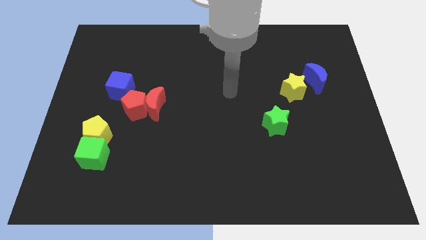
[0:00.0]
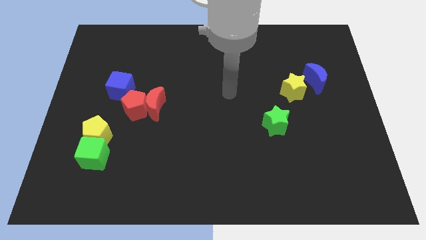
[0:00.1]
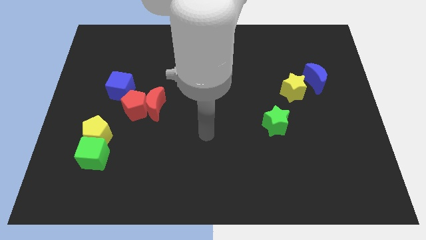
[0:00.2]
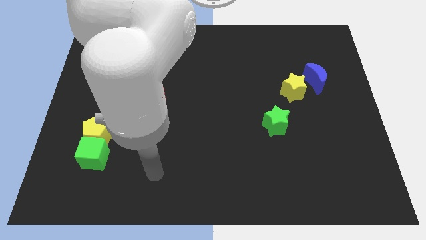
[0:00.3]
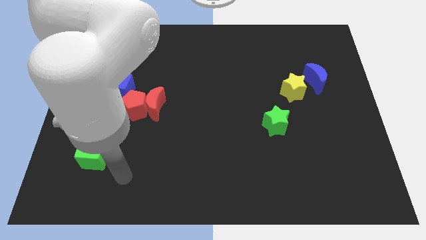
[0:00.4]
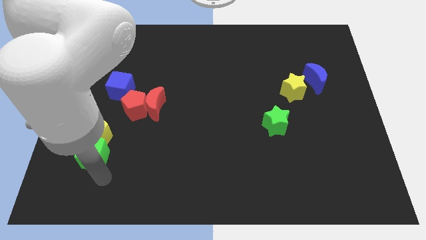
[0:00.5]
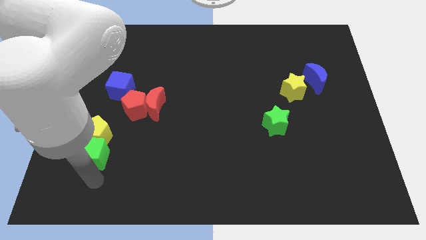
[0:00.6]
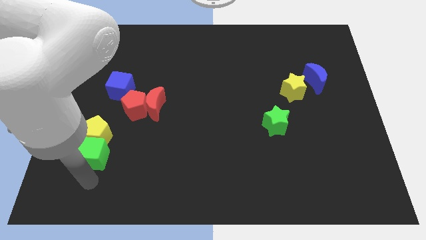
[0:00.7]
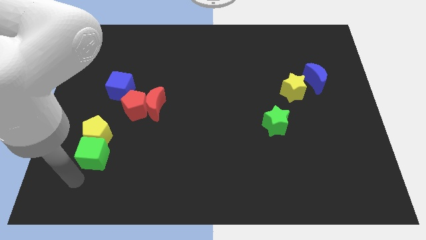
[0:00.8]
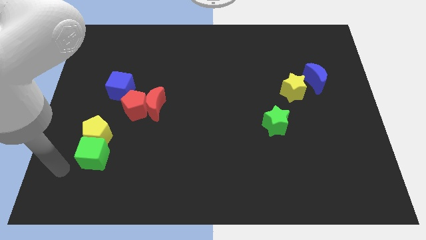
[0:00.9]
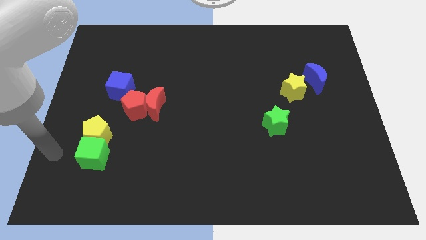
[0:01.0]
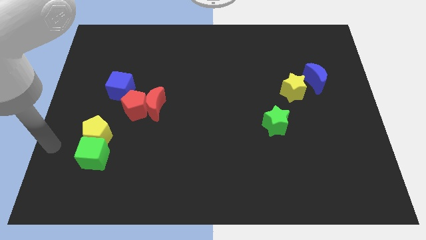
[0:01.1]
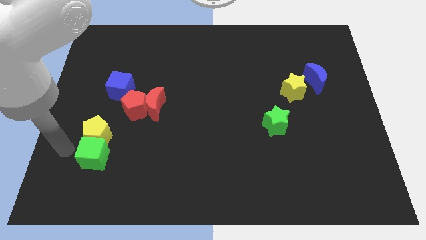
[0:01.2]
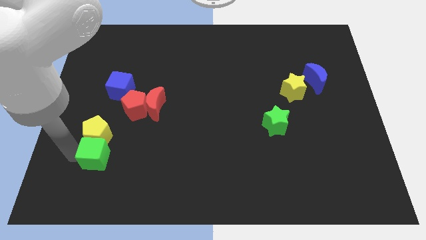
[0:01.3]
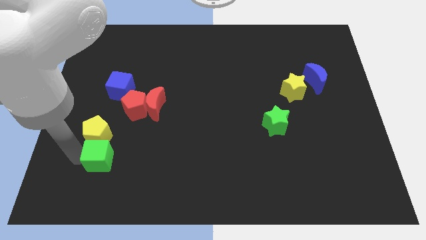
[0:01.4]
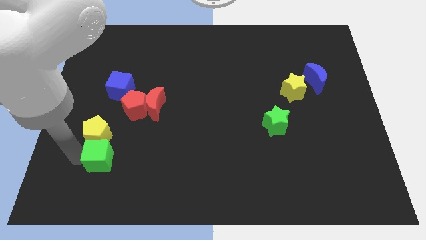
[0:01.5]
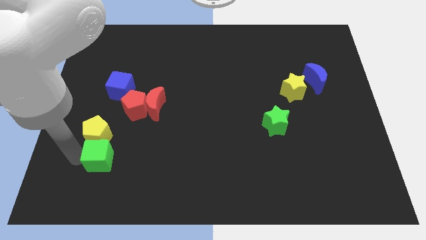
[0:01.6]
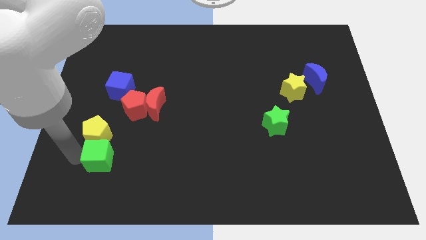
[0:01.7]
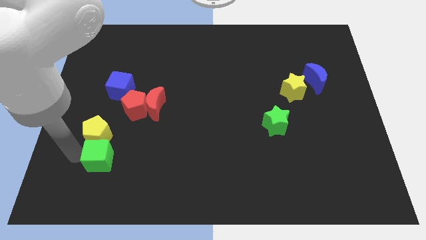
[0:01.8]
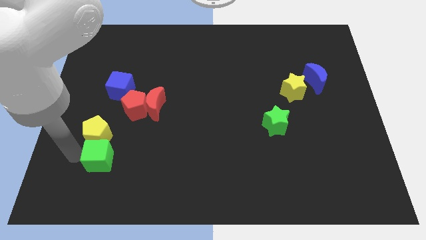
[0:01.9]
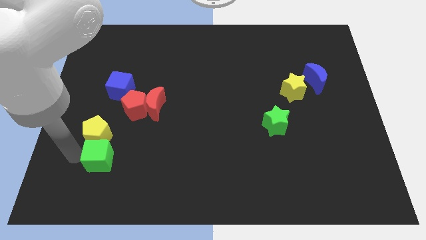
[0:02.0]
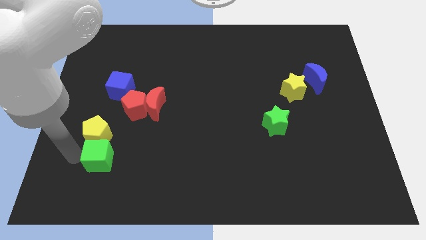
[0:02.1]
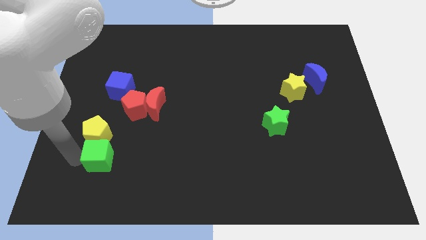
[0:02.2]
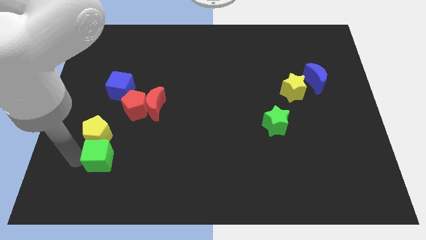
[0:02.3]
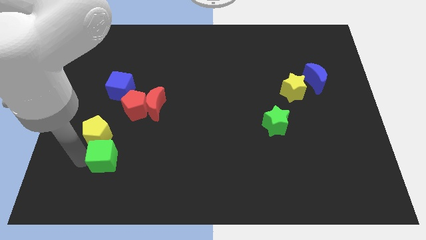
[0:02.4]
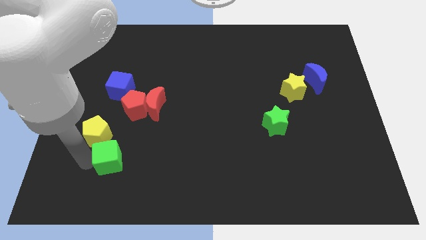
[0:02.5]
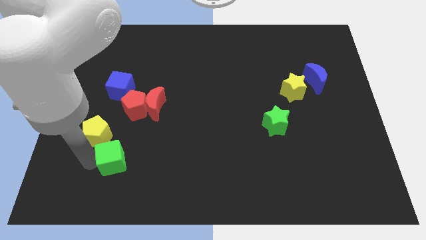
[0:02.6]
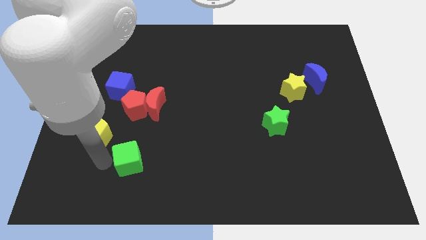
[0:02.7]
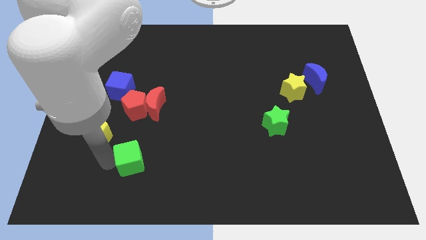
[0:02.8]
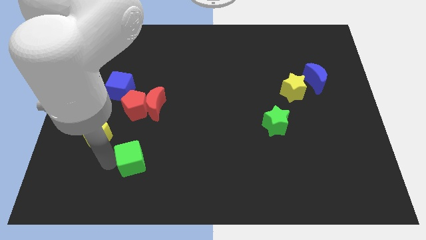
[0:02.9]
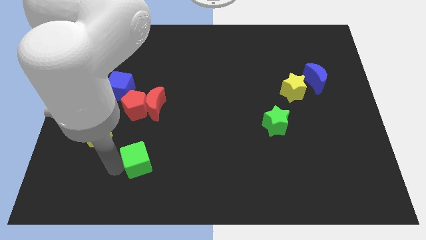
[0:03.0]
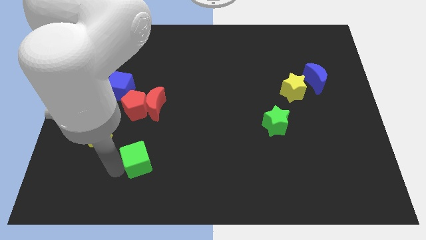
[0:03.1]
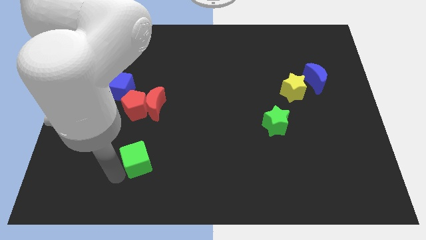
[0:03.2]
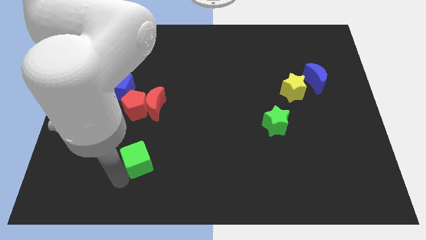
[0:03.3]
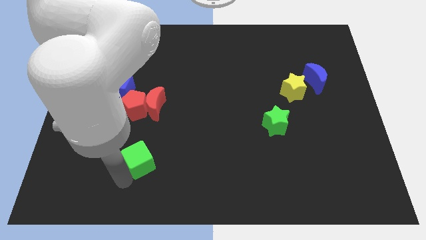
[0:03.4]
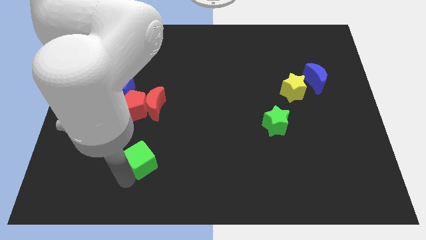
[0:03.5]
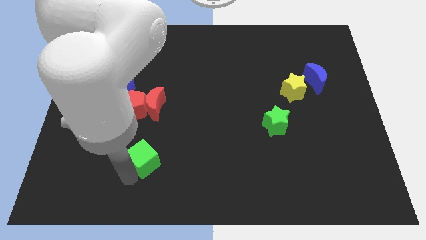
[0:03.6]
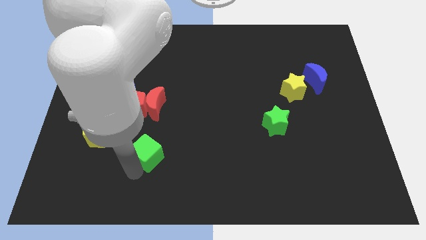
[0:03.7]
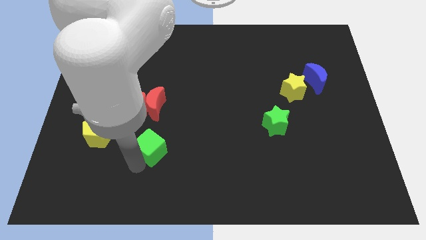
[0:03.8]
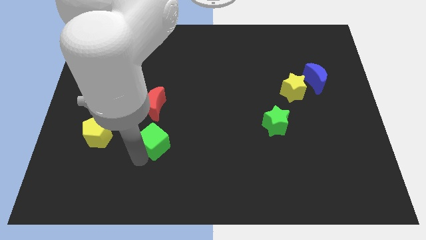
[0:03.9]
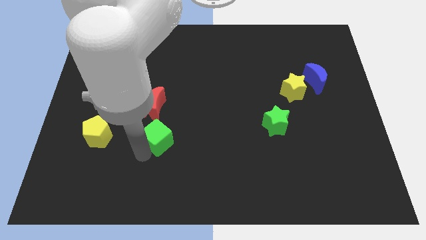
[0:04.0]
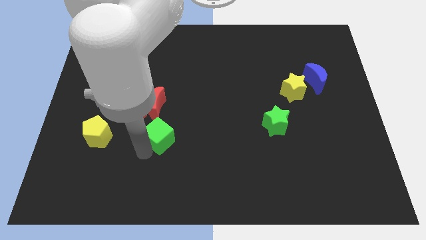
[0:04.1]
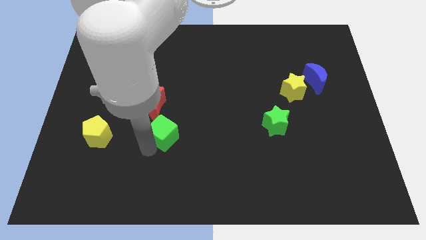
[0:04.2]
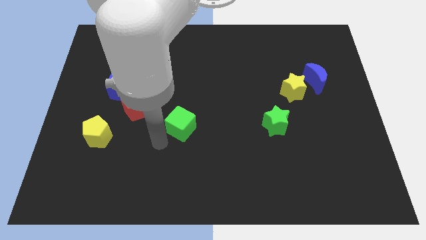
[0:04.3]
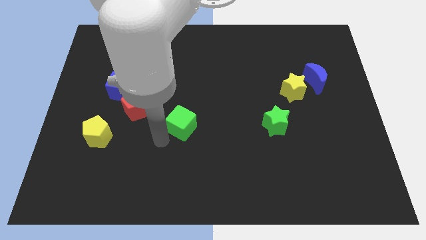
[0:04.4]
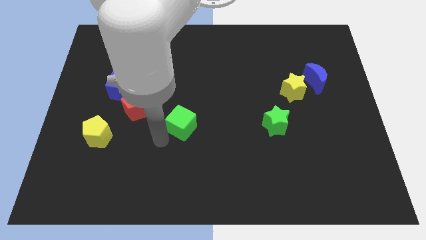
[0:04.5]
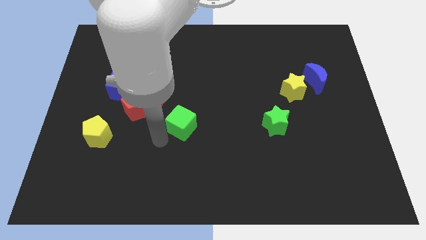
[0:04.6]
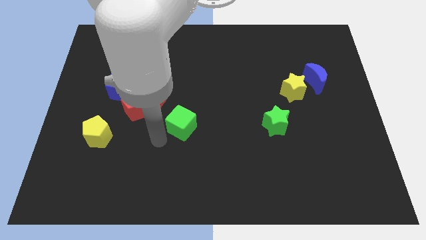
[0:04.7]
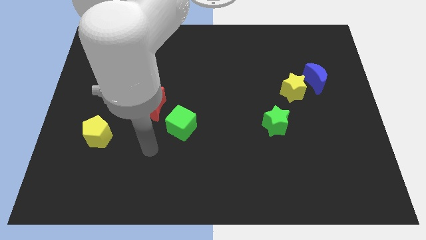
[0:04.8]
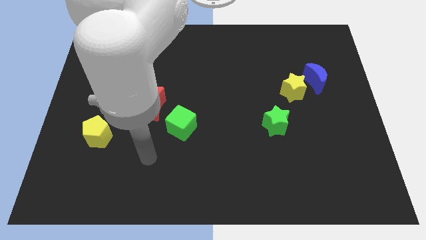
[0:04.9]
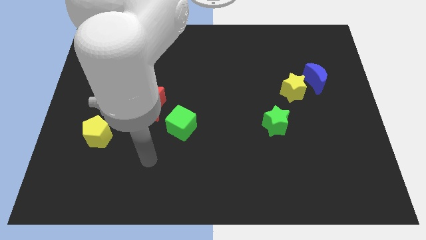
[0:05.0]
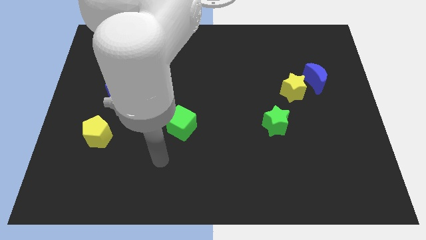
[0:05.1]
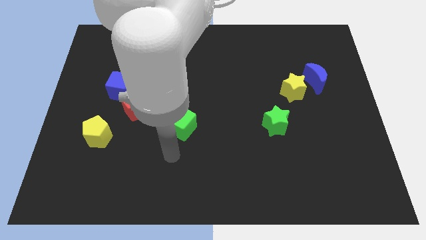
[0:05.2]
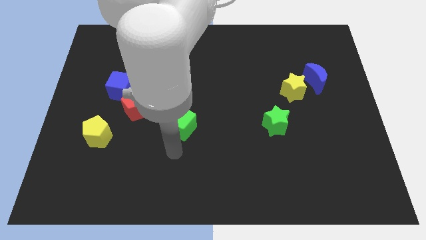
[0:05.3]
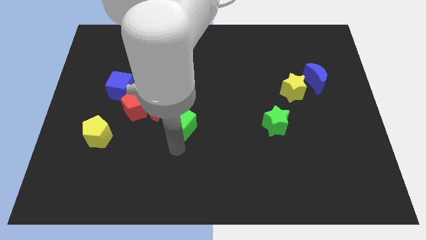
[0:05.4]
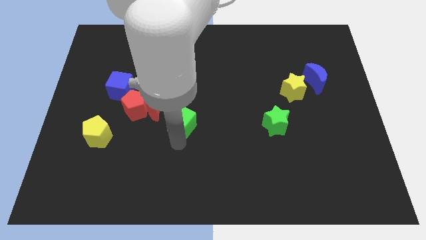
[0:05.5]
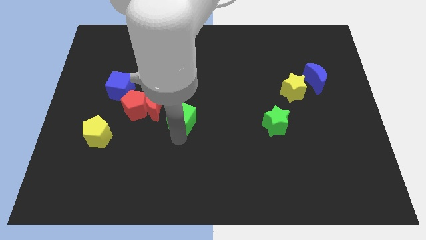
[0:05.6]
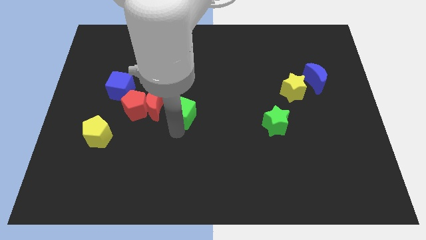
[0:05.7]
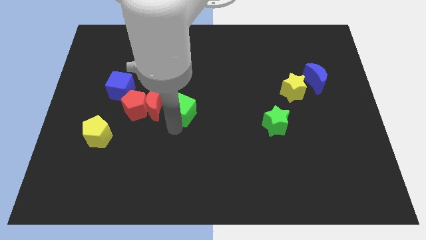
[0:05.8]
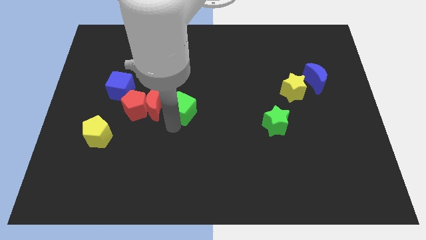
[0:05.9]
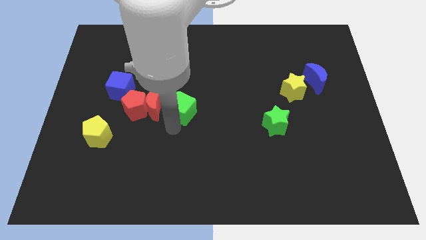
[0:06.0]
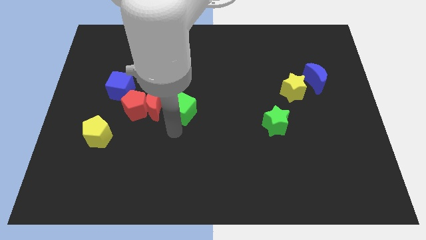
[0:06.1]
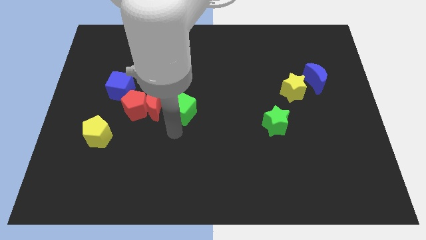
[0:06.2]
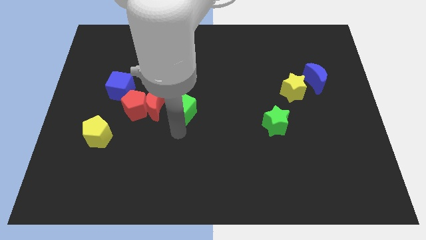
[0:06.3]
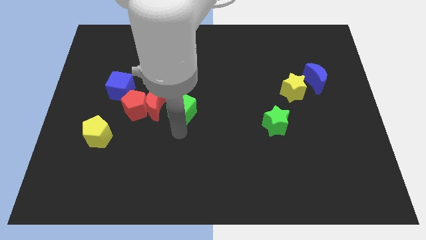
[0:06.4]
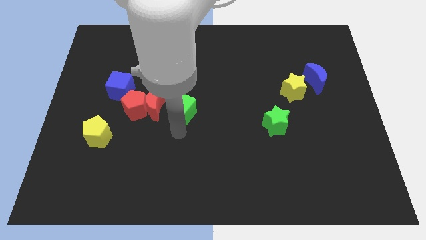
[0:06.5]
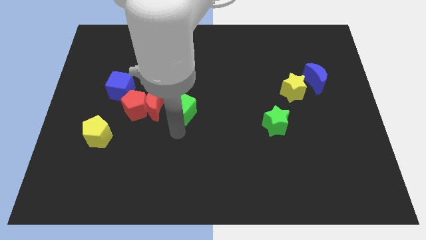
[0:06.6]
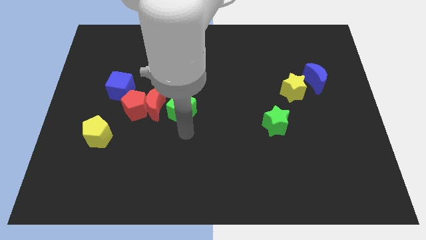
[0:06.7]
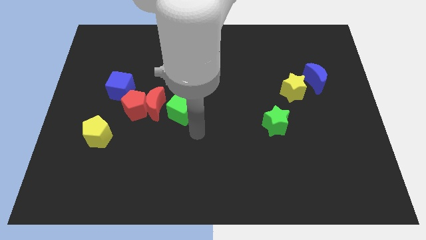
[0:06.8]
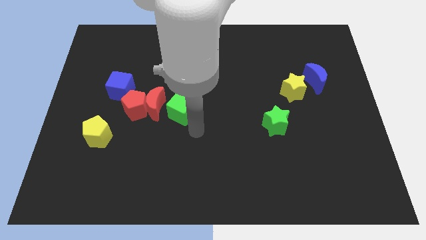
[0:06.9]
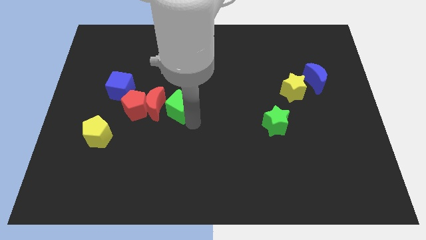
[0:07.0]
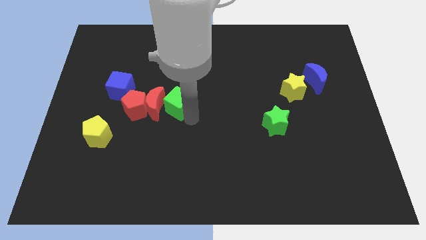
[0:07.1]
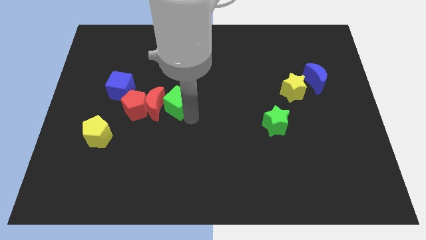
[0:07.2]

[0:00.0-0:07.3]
move the green cube towards the red moon

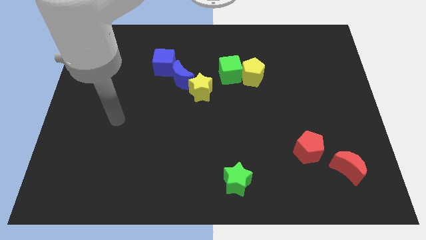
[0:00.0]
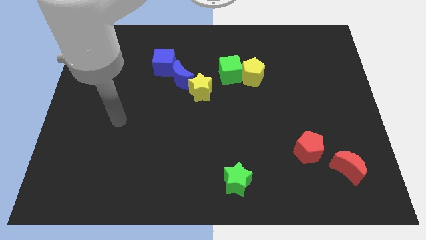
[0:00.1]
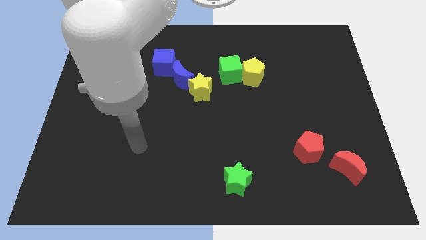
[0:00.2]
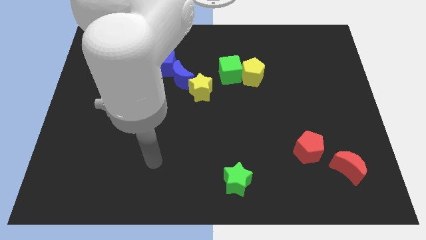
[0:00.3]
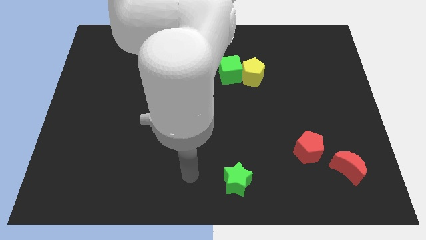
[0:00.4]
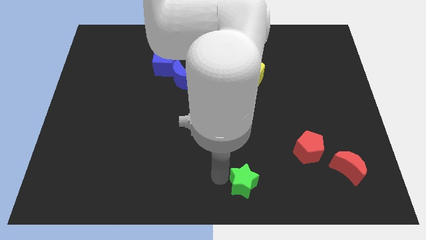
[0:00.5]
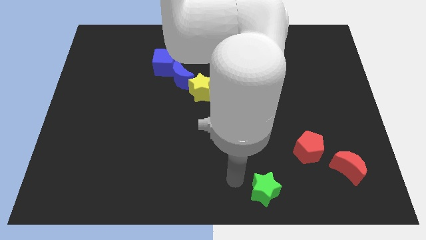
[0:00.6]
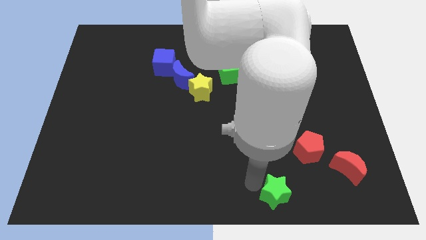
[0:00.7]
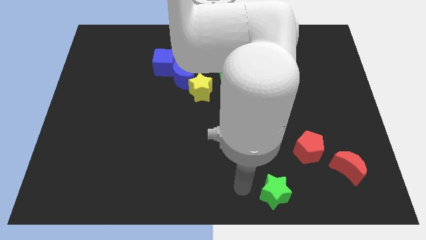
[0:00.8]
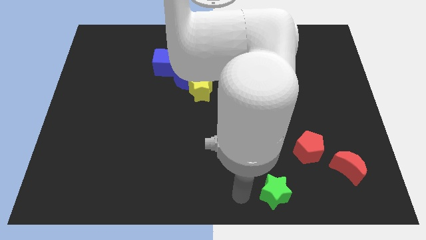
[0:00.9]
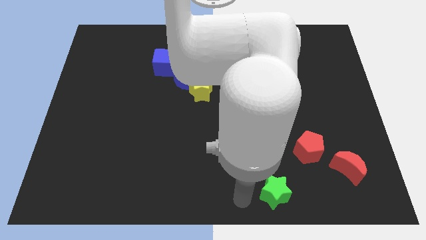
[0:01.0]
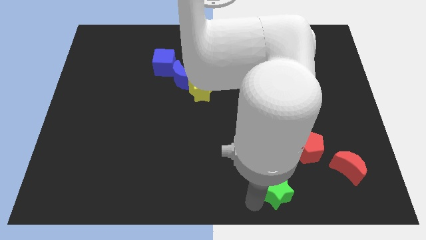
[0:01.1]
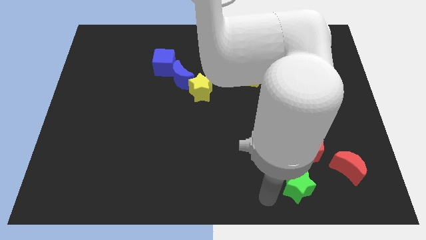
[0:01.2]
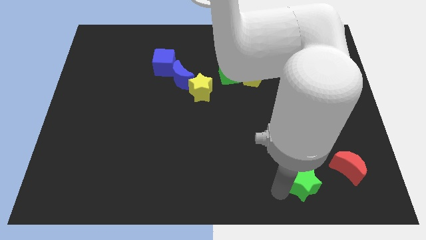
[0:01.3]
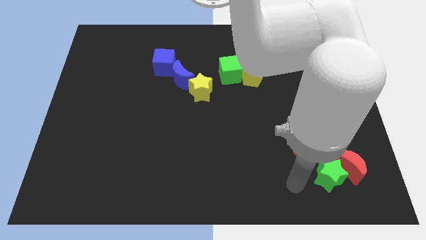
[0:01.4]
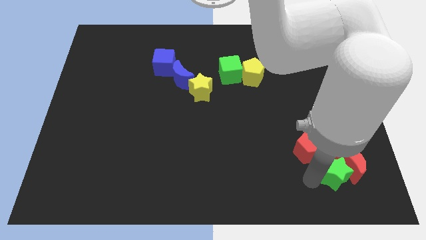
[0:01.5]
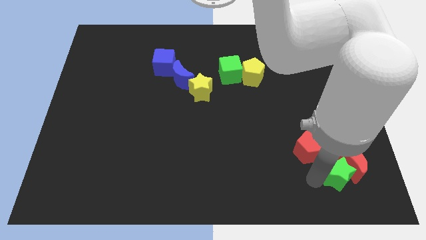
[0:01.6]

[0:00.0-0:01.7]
push the green star close to the red moon
